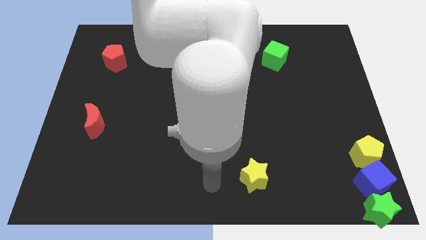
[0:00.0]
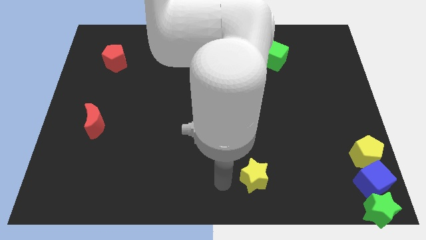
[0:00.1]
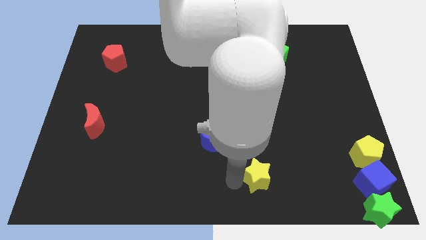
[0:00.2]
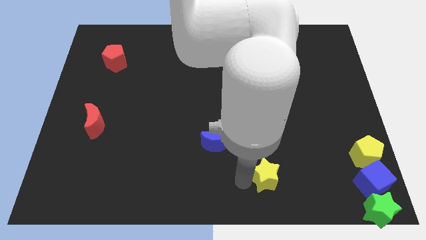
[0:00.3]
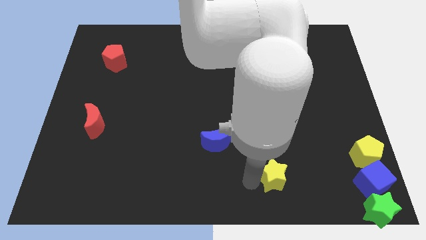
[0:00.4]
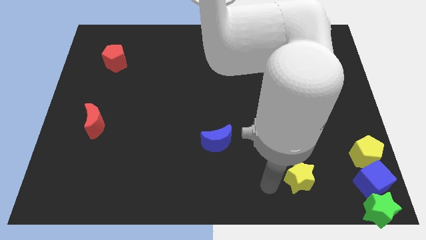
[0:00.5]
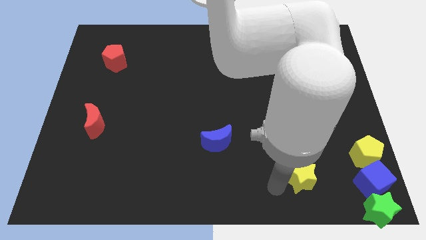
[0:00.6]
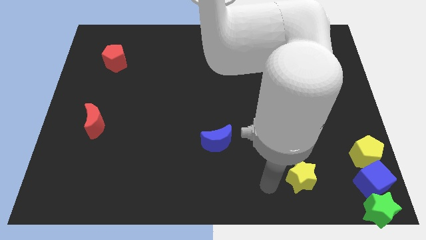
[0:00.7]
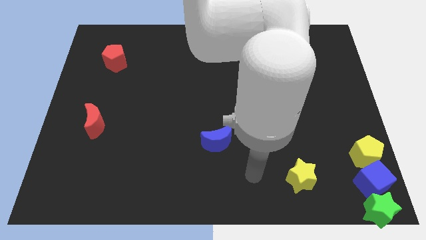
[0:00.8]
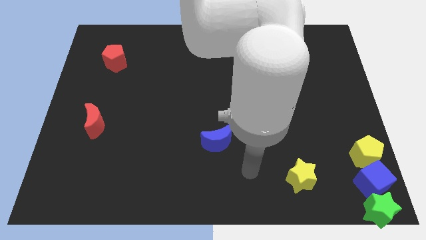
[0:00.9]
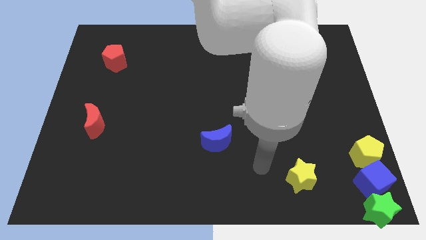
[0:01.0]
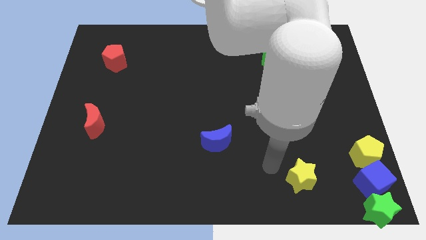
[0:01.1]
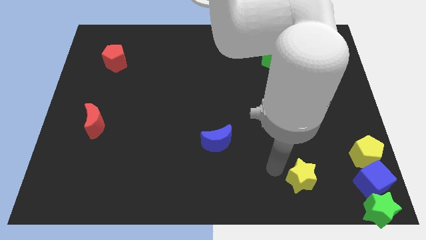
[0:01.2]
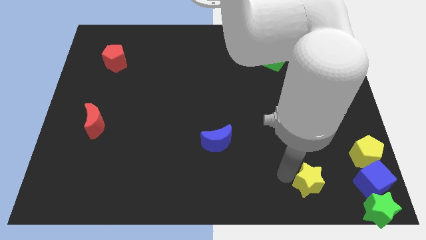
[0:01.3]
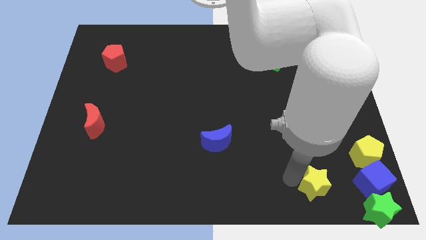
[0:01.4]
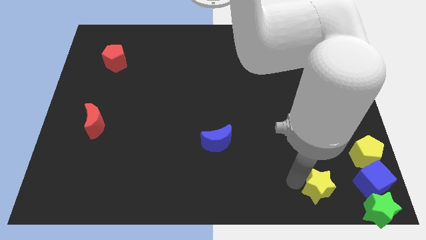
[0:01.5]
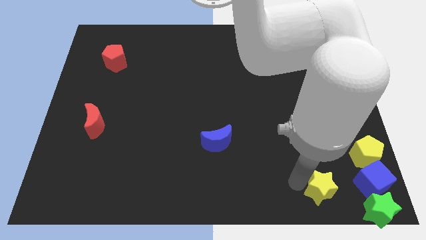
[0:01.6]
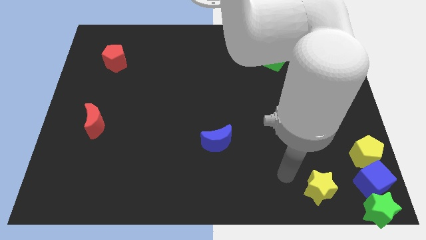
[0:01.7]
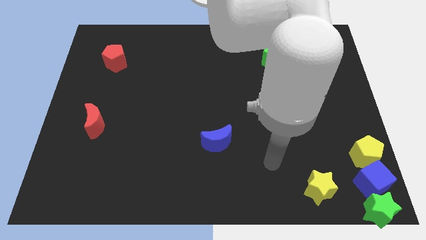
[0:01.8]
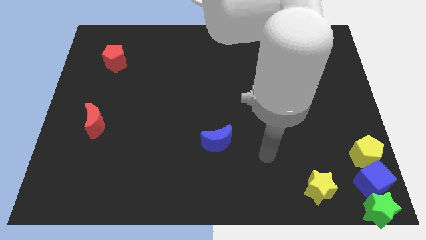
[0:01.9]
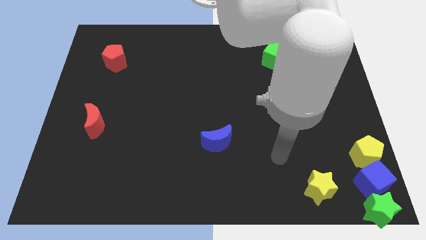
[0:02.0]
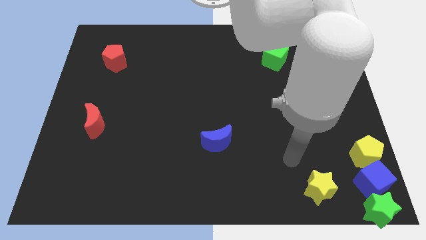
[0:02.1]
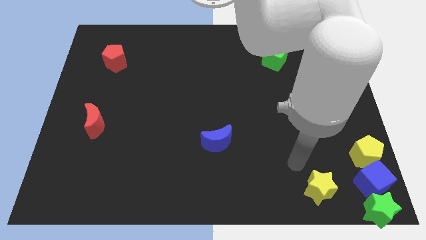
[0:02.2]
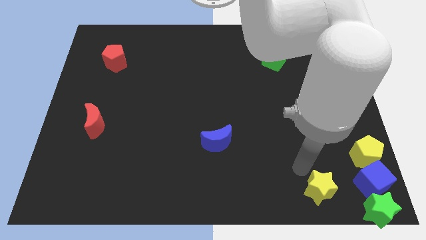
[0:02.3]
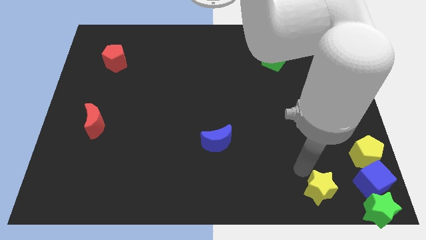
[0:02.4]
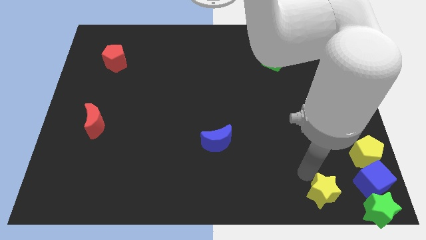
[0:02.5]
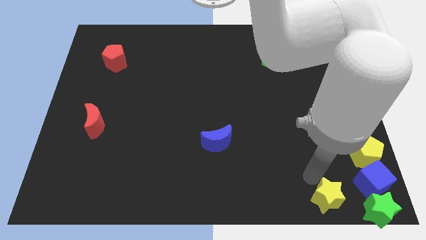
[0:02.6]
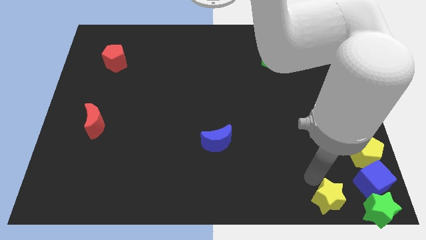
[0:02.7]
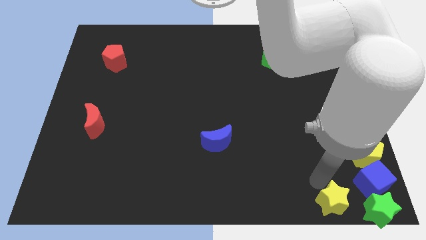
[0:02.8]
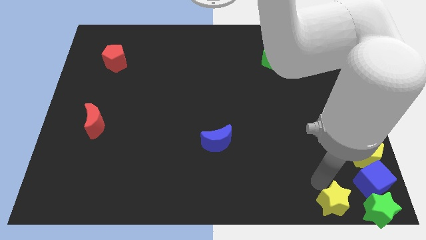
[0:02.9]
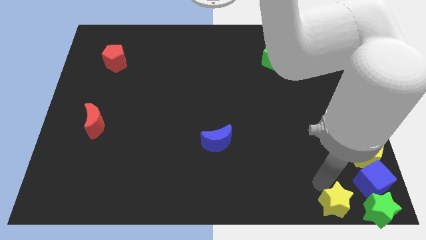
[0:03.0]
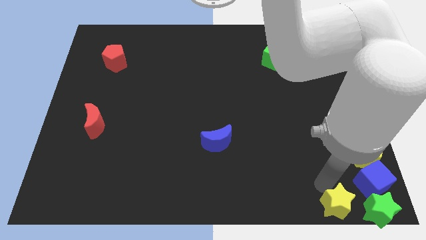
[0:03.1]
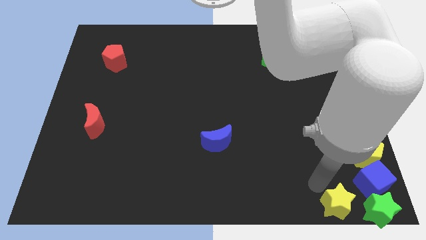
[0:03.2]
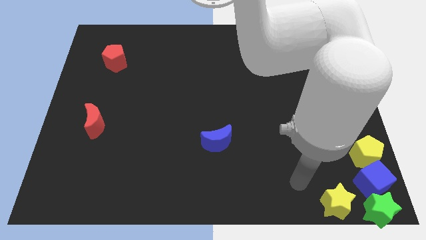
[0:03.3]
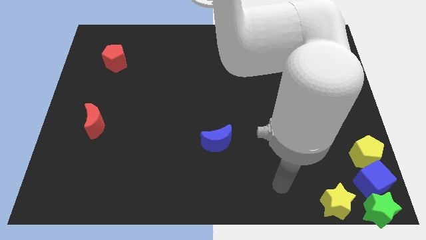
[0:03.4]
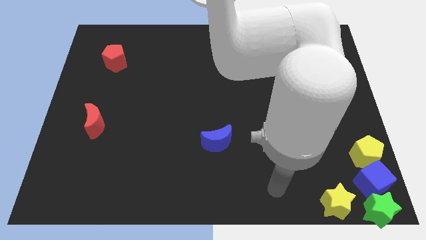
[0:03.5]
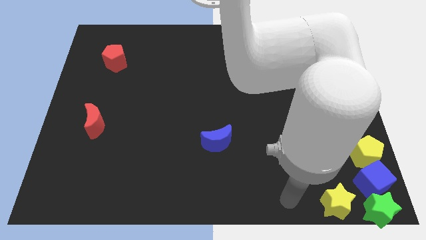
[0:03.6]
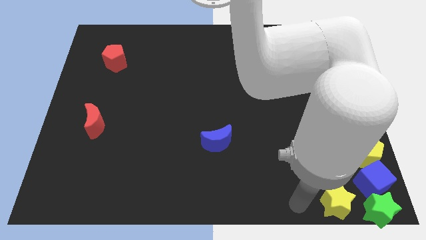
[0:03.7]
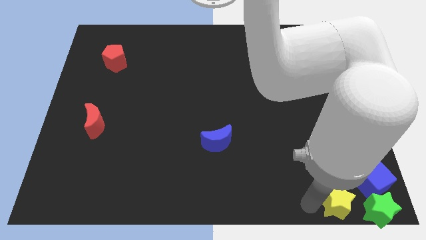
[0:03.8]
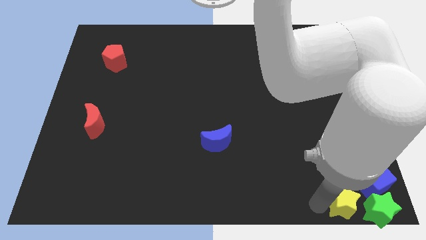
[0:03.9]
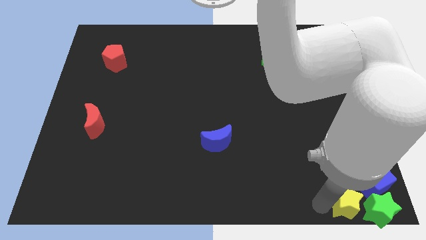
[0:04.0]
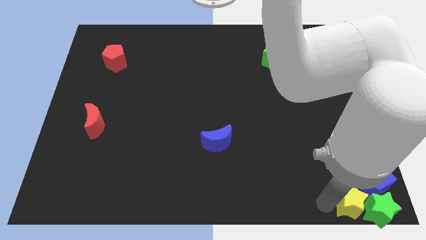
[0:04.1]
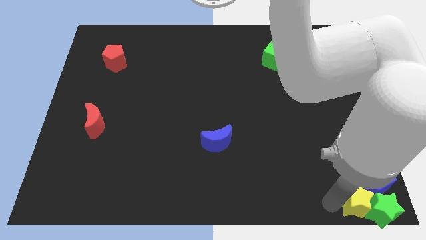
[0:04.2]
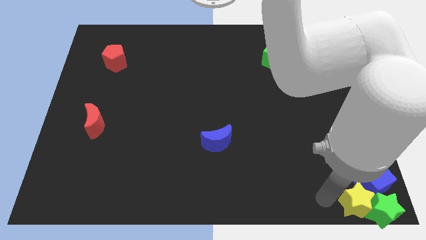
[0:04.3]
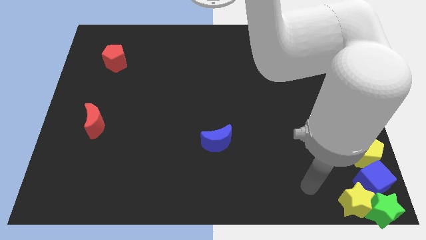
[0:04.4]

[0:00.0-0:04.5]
slide the yellow star into the green star

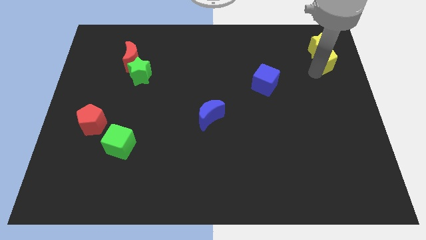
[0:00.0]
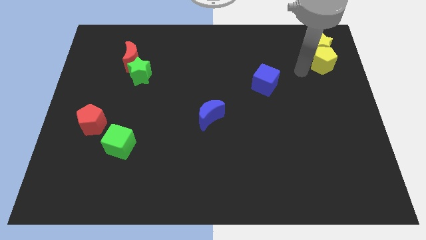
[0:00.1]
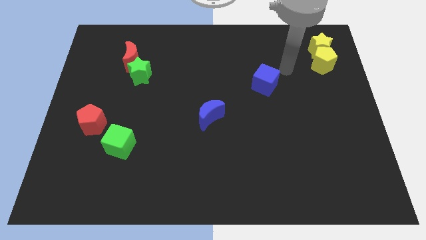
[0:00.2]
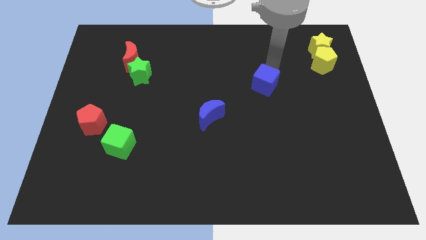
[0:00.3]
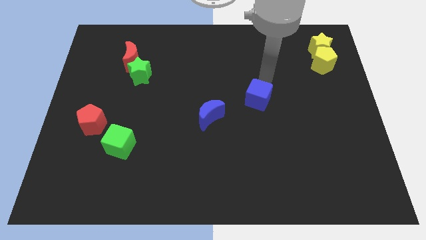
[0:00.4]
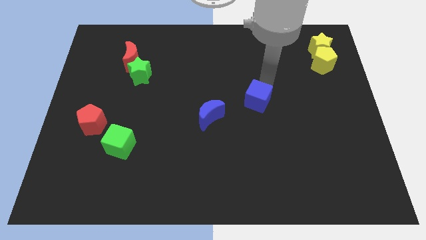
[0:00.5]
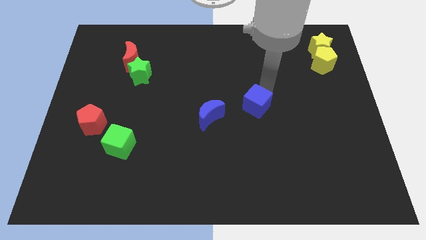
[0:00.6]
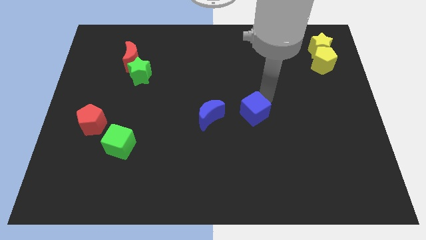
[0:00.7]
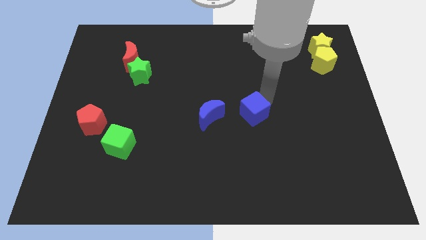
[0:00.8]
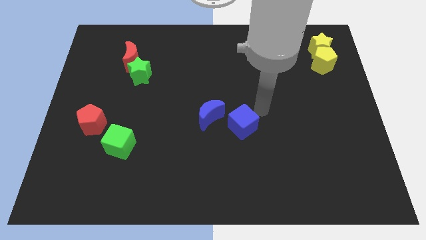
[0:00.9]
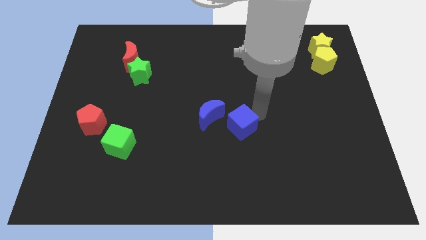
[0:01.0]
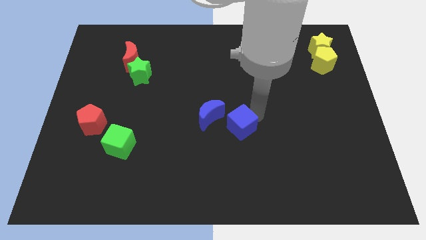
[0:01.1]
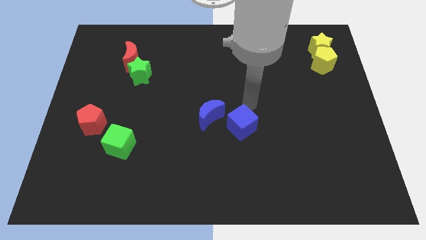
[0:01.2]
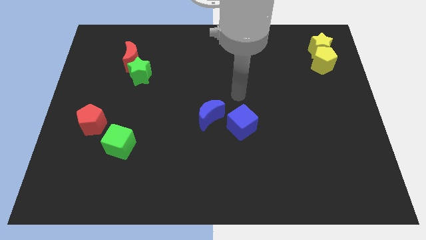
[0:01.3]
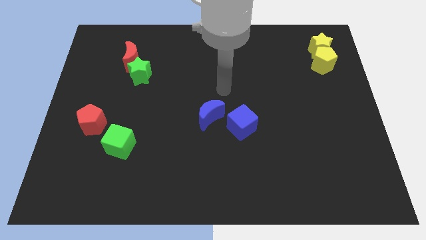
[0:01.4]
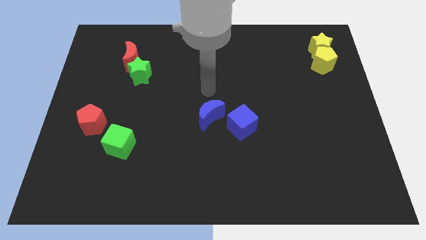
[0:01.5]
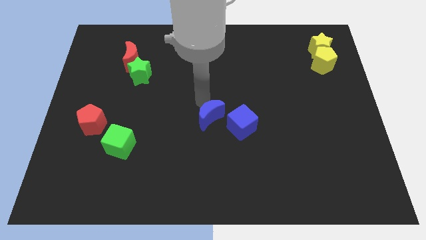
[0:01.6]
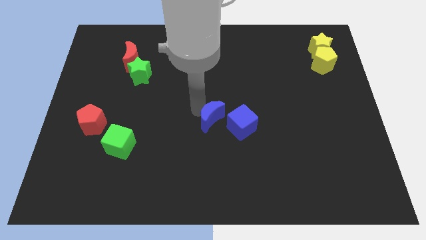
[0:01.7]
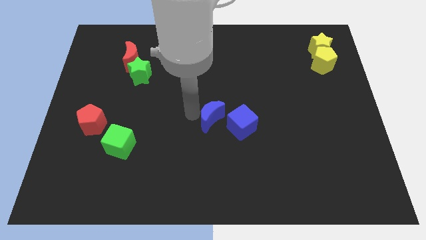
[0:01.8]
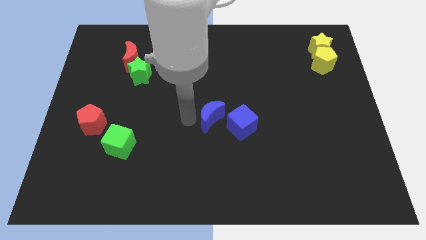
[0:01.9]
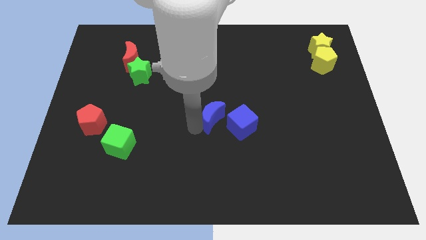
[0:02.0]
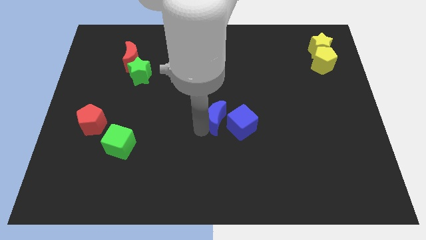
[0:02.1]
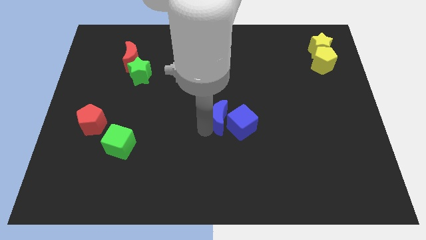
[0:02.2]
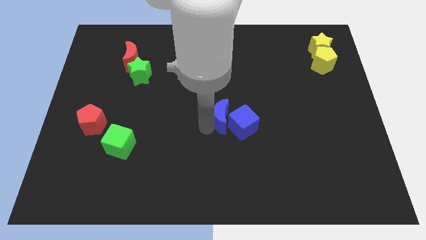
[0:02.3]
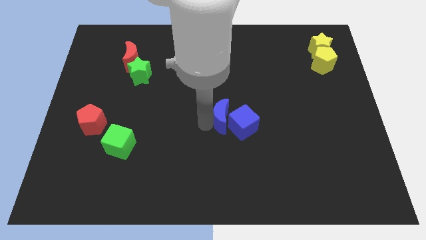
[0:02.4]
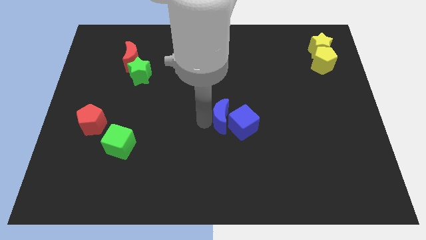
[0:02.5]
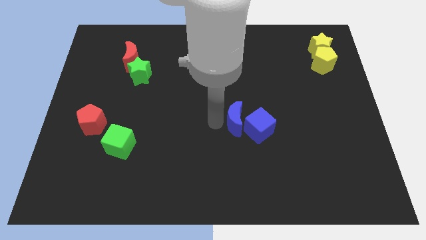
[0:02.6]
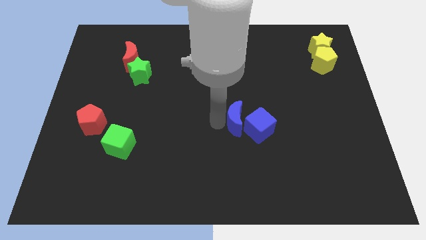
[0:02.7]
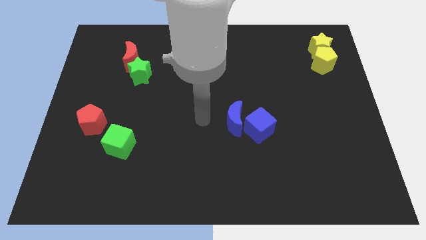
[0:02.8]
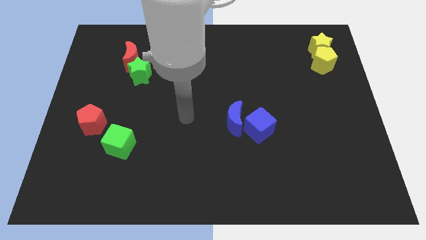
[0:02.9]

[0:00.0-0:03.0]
move the blue cube and the blue crescent together slightly to the right

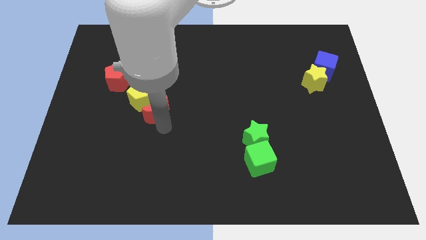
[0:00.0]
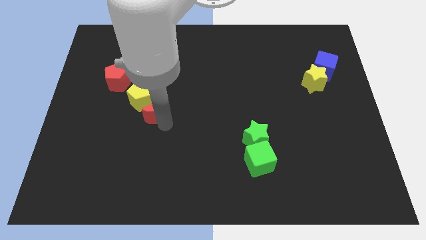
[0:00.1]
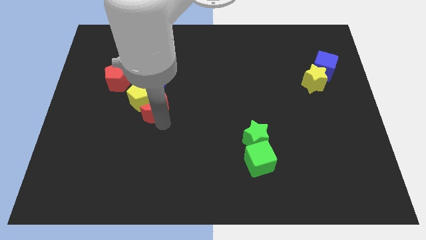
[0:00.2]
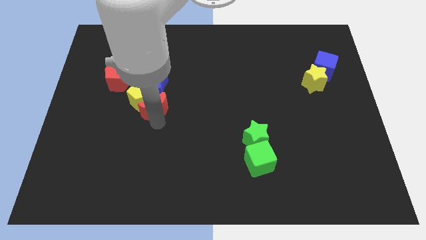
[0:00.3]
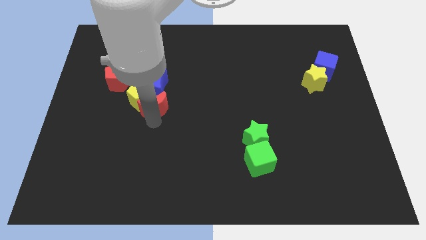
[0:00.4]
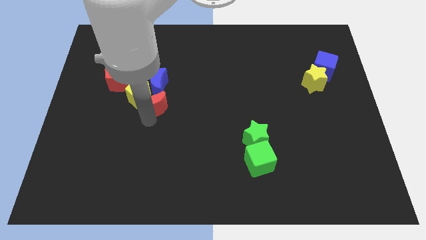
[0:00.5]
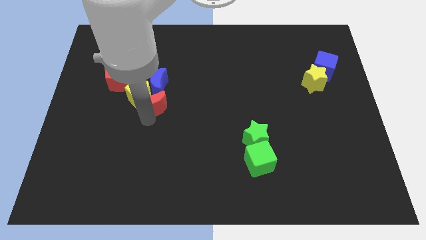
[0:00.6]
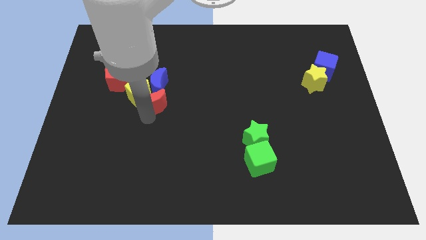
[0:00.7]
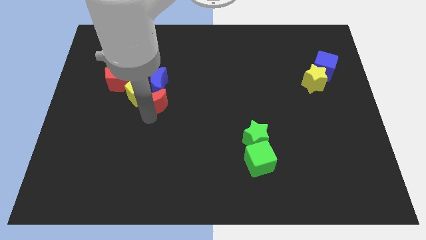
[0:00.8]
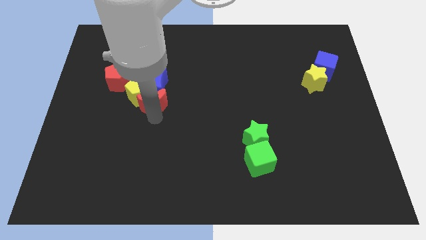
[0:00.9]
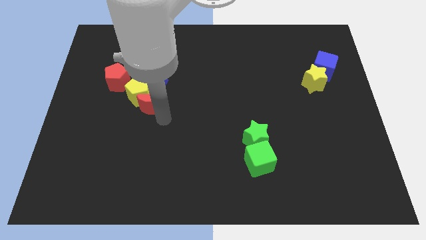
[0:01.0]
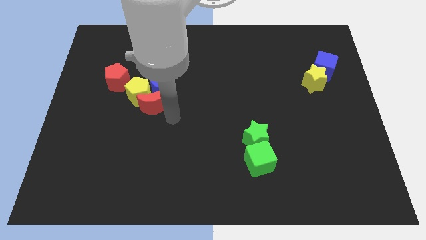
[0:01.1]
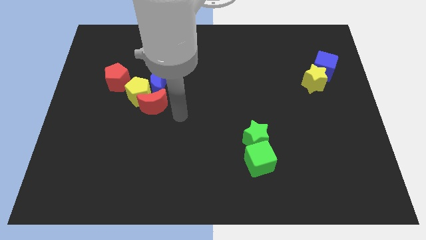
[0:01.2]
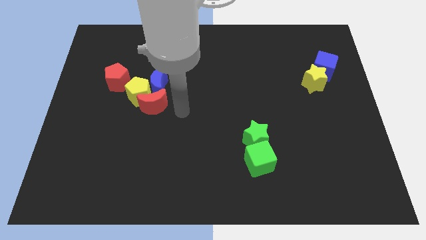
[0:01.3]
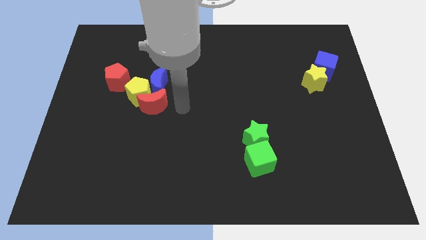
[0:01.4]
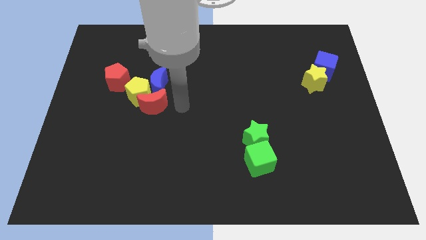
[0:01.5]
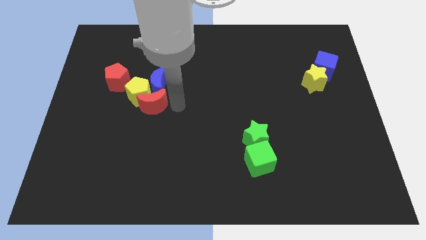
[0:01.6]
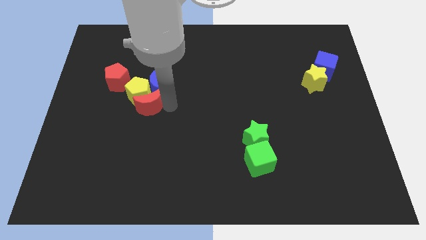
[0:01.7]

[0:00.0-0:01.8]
push the red crescent into the yellow pentagon and the blue moon
